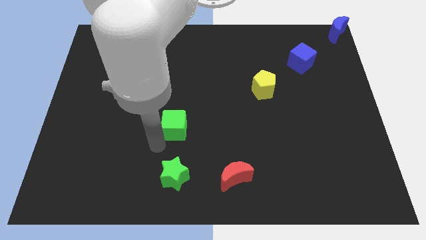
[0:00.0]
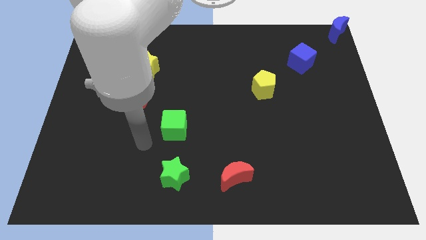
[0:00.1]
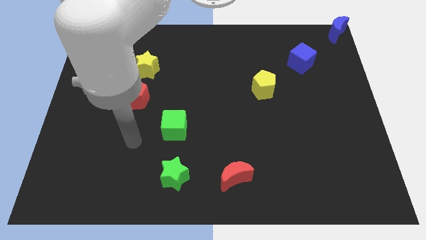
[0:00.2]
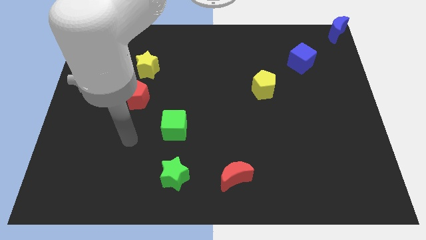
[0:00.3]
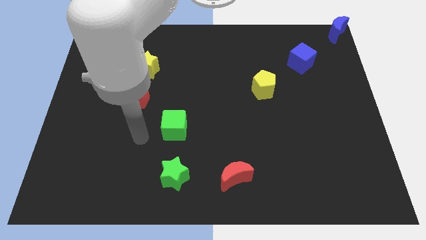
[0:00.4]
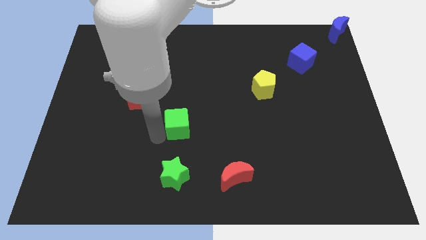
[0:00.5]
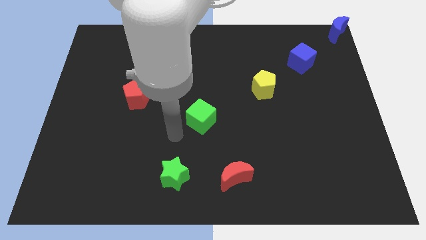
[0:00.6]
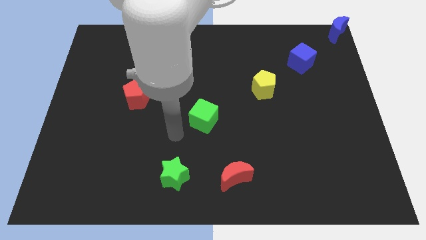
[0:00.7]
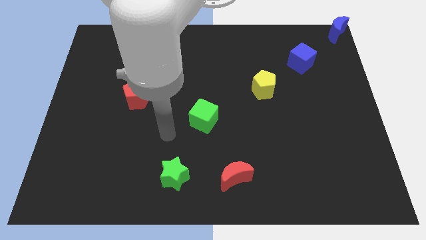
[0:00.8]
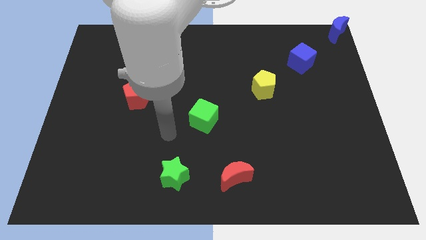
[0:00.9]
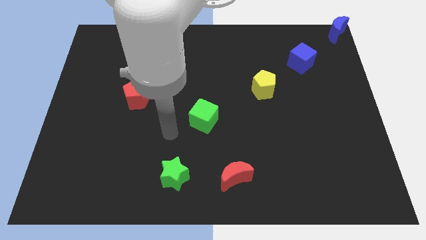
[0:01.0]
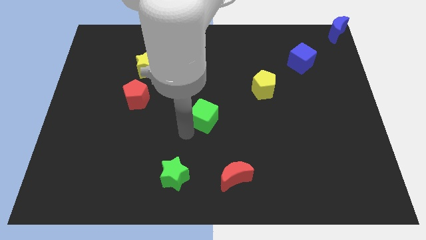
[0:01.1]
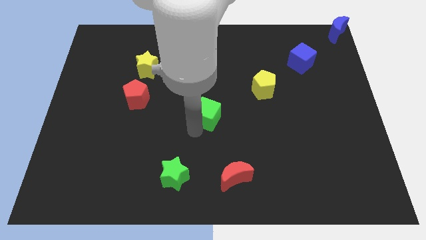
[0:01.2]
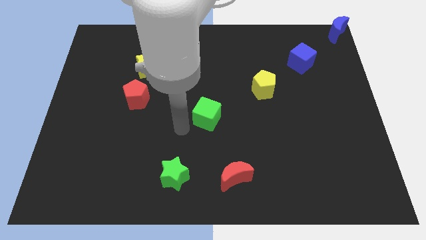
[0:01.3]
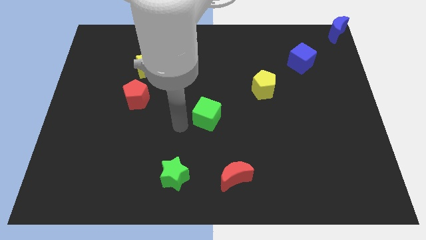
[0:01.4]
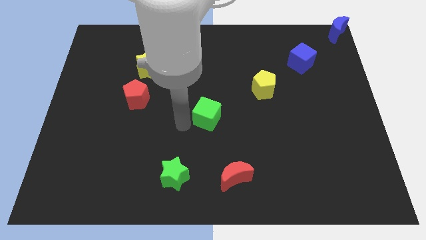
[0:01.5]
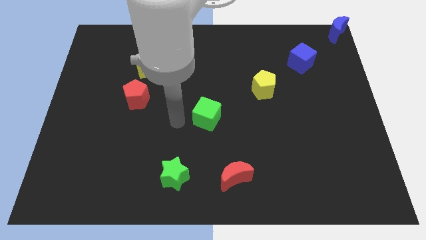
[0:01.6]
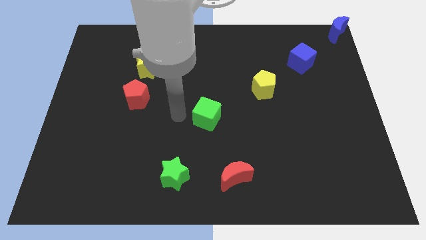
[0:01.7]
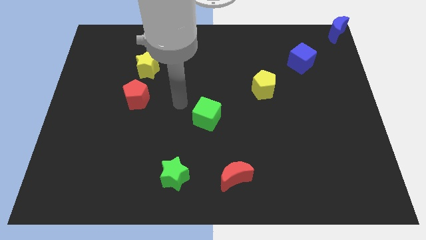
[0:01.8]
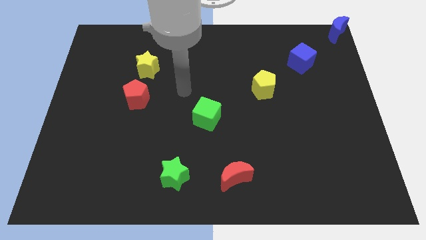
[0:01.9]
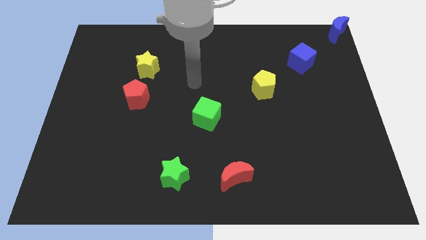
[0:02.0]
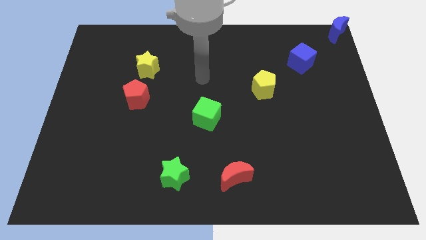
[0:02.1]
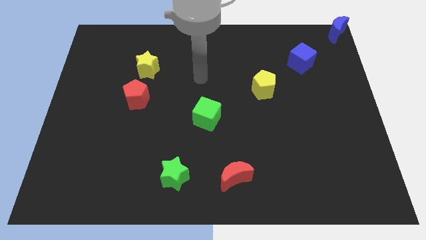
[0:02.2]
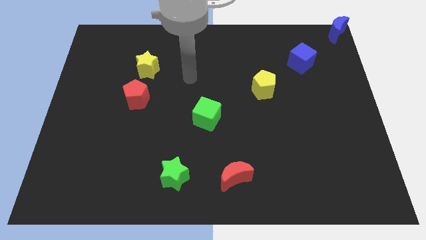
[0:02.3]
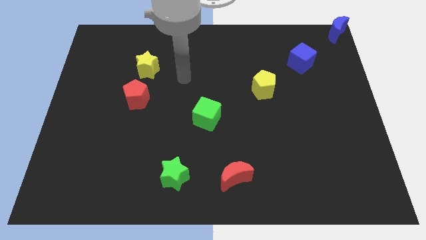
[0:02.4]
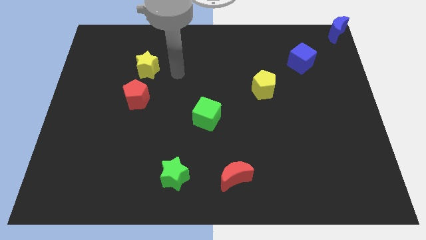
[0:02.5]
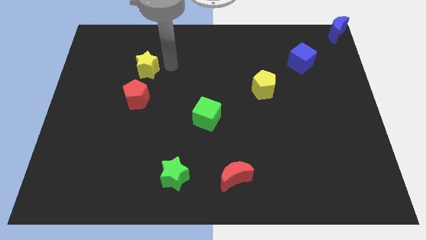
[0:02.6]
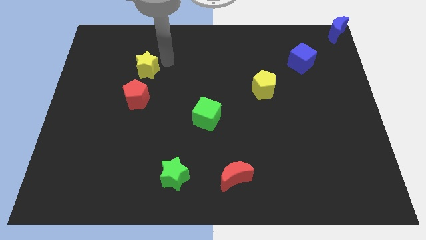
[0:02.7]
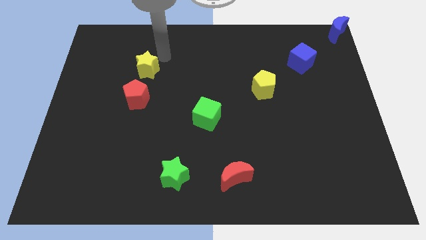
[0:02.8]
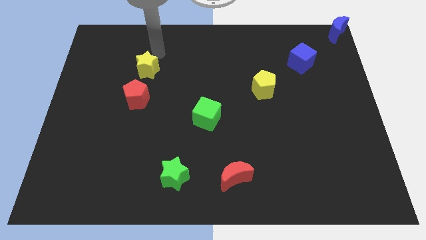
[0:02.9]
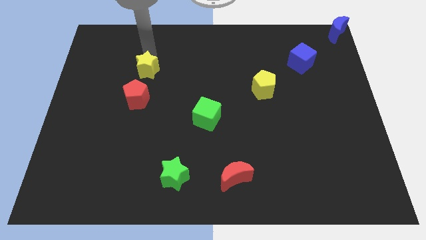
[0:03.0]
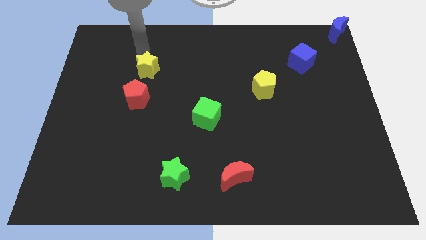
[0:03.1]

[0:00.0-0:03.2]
move green cube diagonally to the top right side of the green star

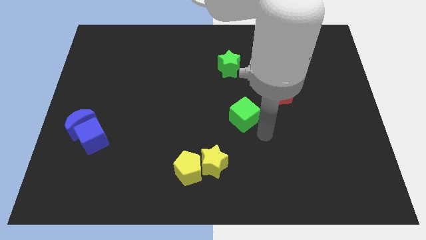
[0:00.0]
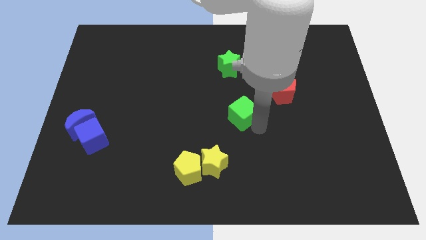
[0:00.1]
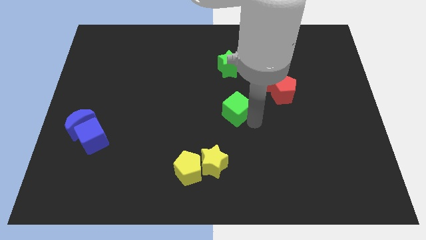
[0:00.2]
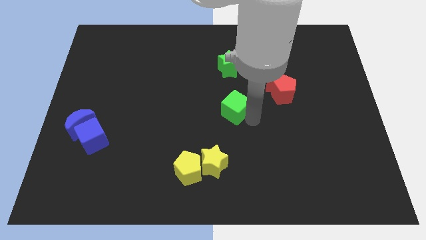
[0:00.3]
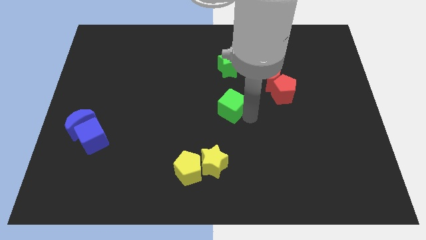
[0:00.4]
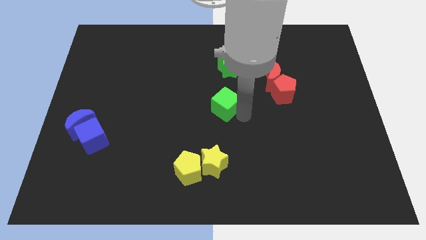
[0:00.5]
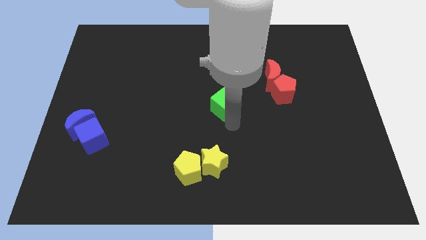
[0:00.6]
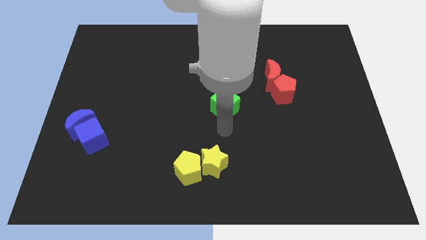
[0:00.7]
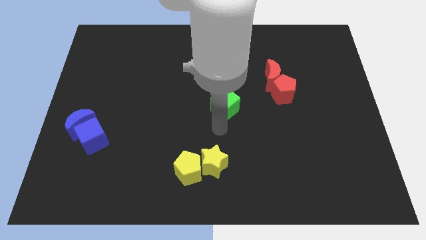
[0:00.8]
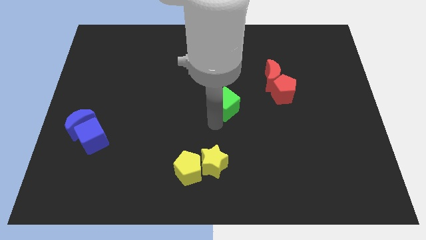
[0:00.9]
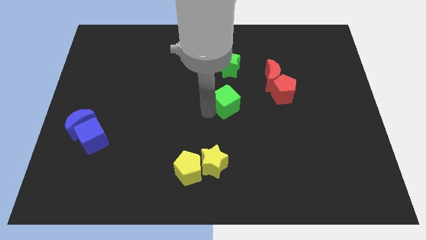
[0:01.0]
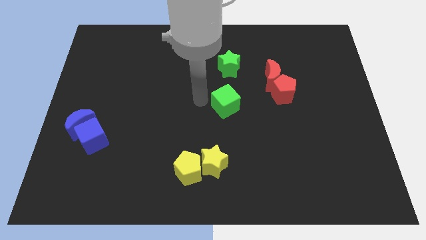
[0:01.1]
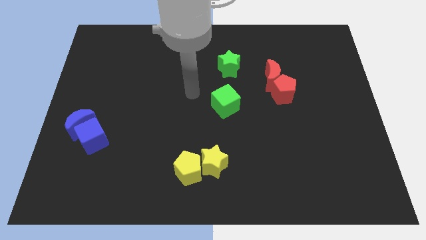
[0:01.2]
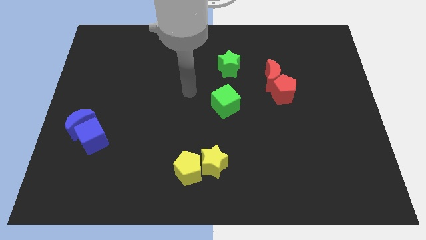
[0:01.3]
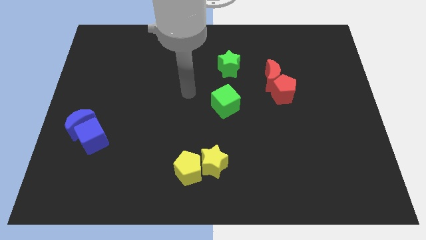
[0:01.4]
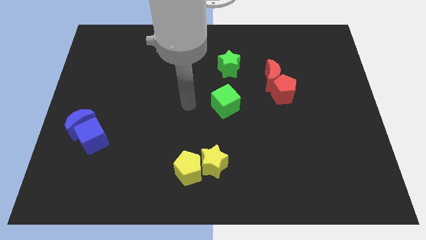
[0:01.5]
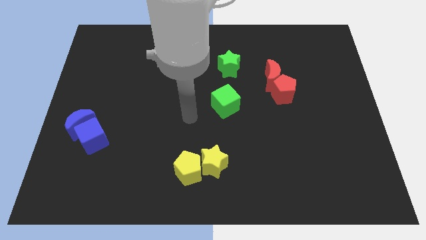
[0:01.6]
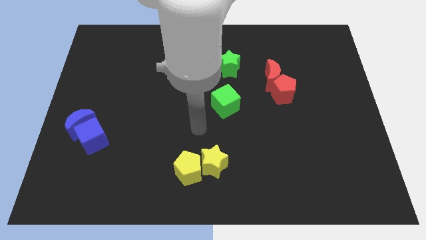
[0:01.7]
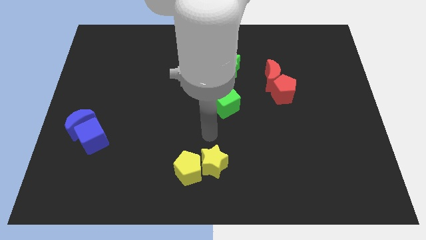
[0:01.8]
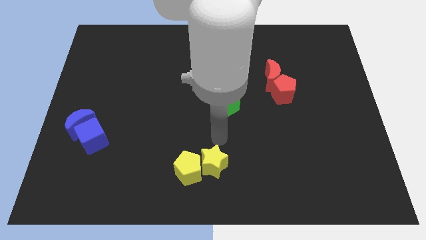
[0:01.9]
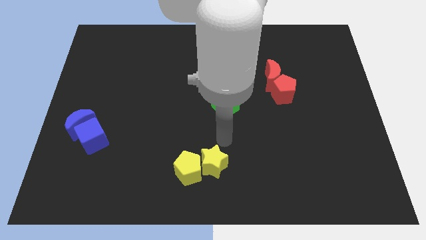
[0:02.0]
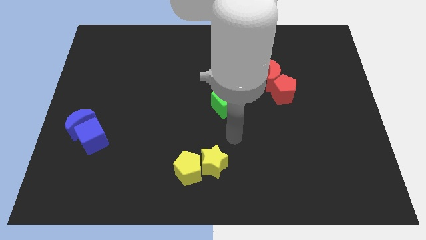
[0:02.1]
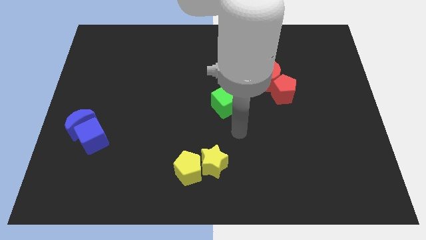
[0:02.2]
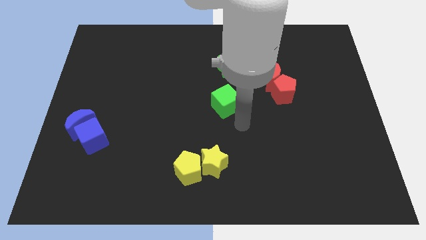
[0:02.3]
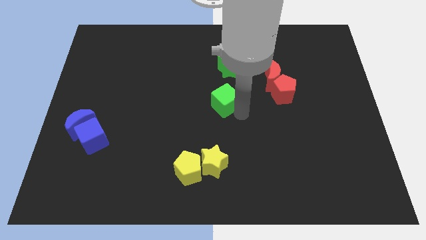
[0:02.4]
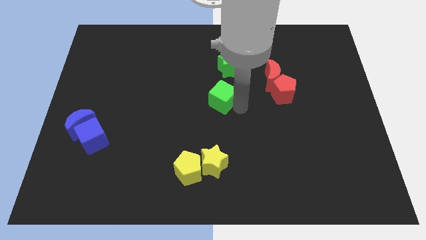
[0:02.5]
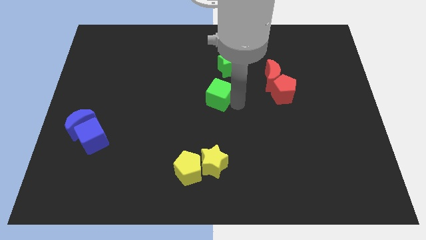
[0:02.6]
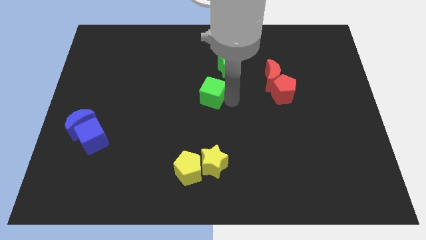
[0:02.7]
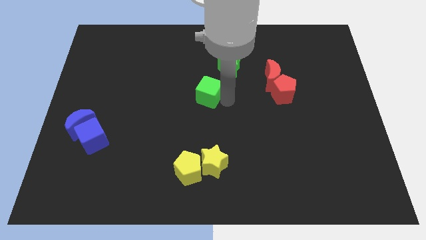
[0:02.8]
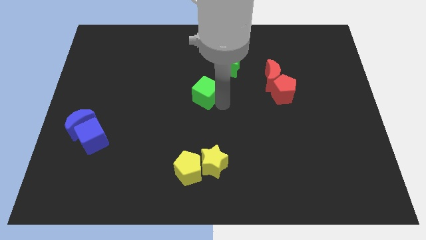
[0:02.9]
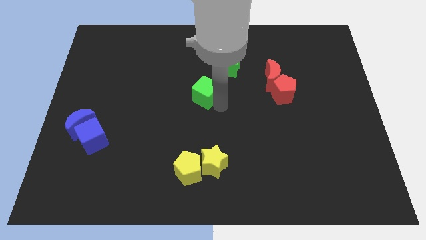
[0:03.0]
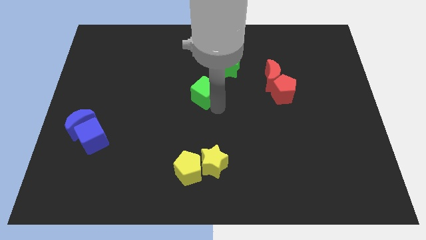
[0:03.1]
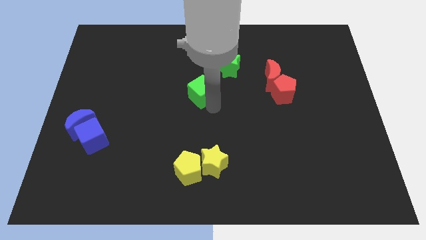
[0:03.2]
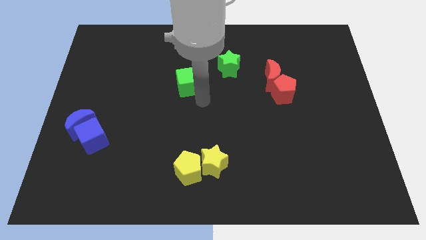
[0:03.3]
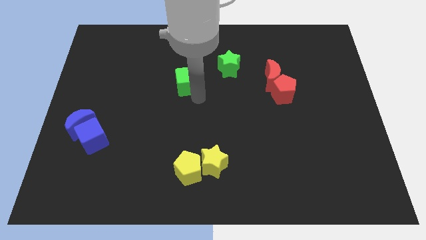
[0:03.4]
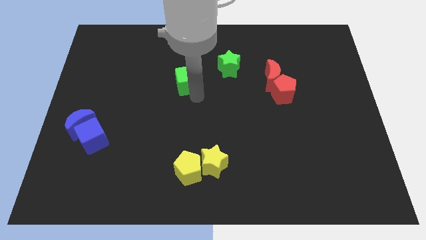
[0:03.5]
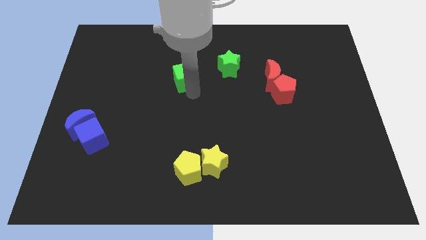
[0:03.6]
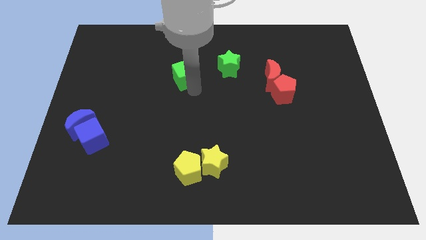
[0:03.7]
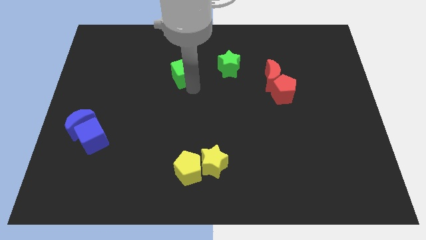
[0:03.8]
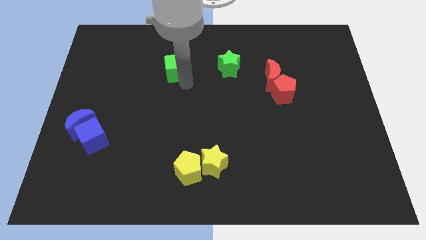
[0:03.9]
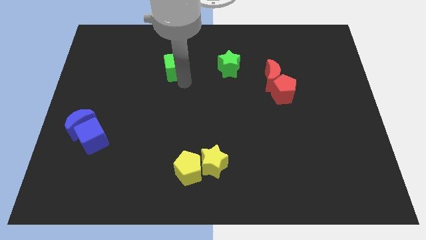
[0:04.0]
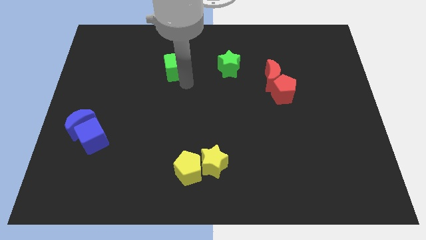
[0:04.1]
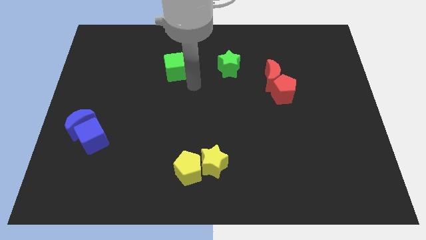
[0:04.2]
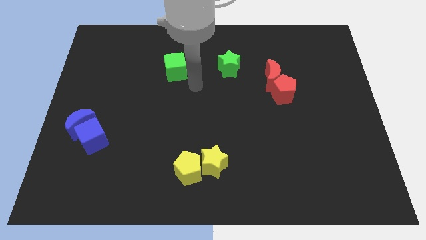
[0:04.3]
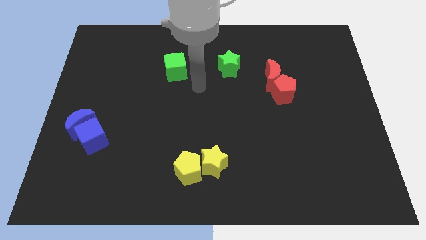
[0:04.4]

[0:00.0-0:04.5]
move the green cube to the left of the green star

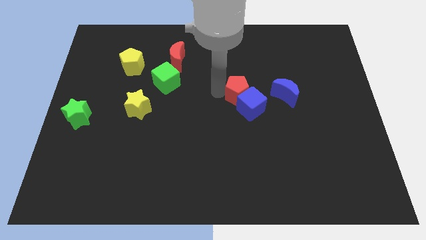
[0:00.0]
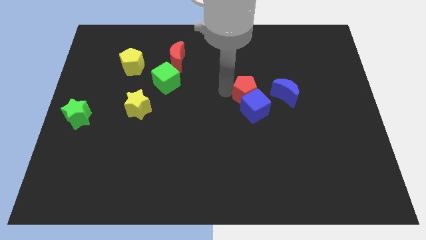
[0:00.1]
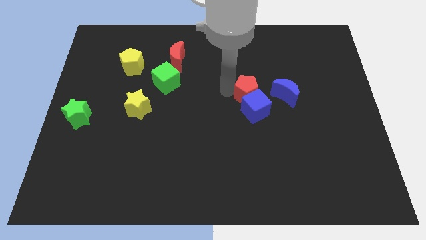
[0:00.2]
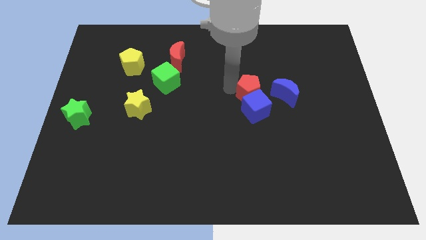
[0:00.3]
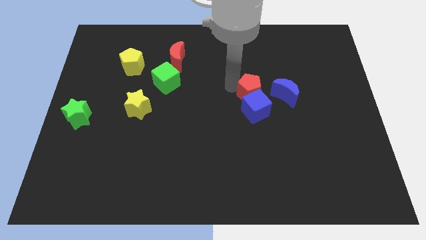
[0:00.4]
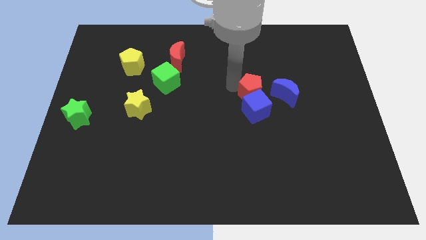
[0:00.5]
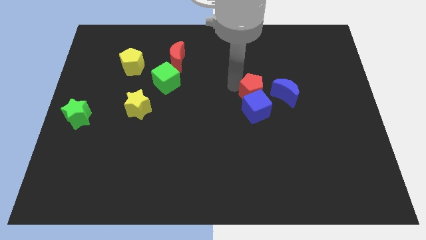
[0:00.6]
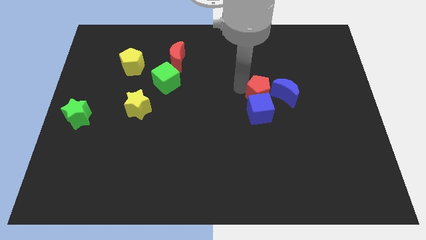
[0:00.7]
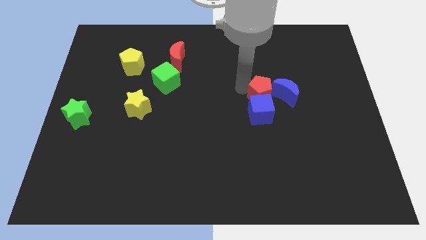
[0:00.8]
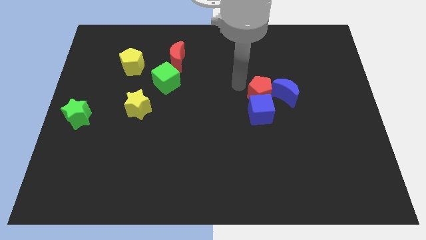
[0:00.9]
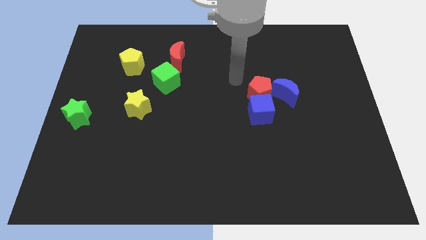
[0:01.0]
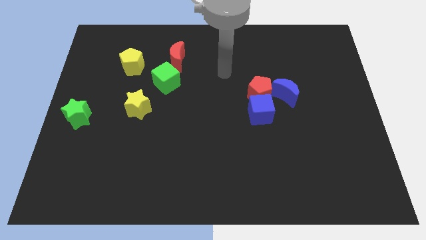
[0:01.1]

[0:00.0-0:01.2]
bring the red pentagon at the left side of the blue crescent

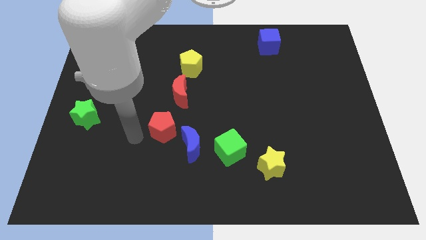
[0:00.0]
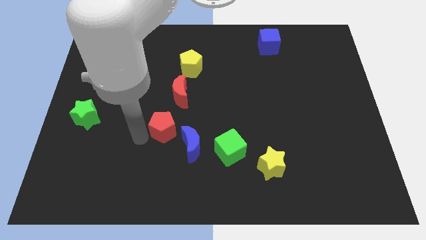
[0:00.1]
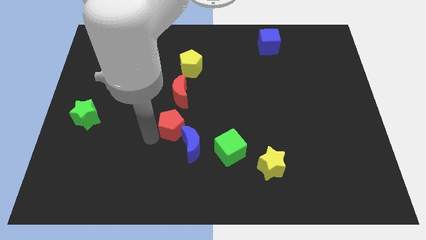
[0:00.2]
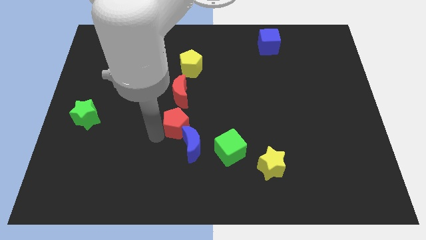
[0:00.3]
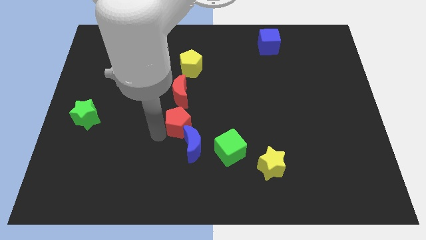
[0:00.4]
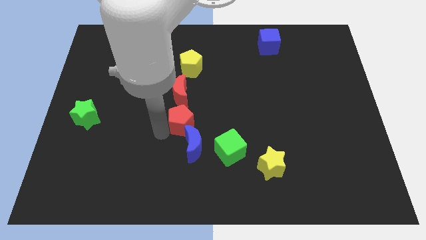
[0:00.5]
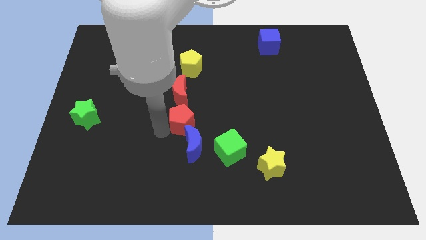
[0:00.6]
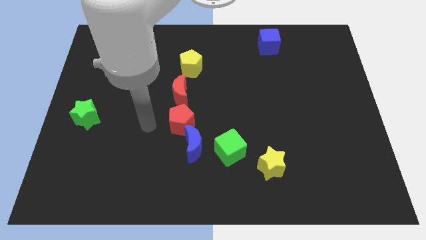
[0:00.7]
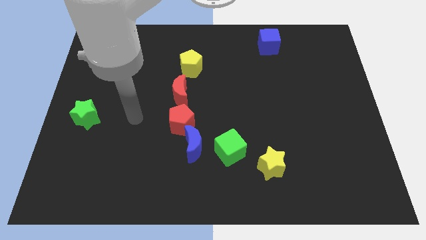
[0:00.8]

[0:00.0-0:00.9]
place the red pentagon in between red moon and blue moon
